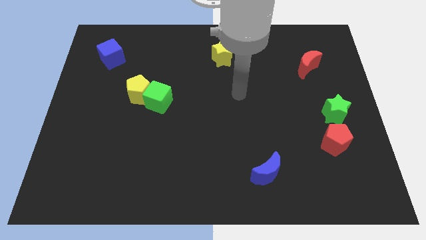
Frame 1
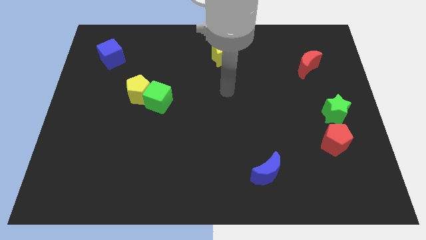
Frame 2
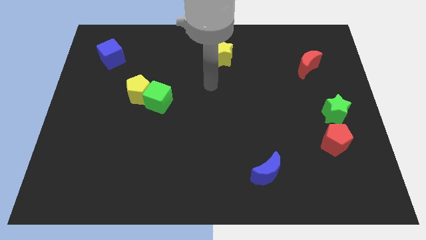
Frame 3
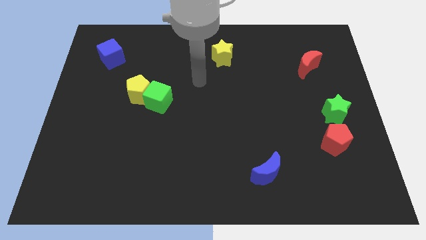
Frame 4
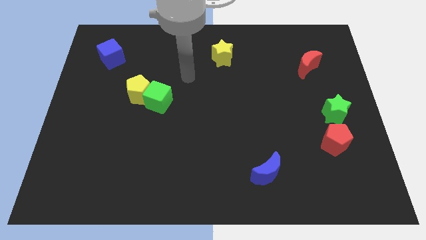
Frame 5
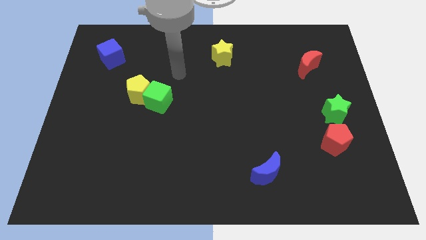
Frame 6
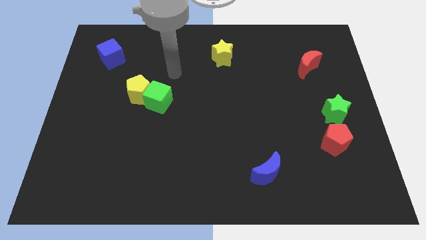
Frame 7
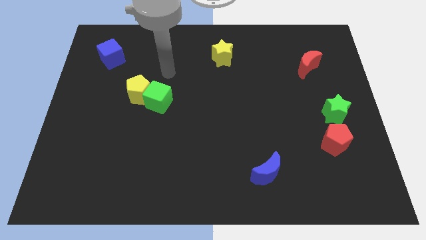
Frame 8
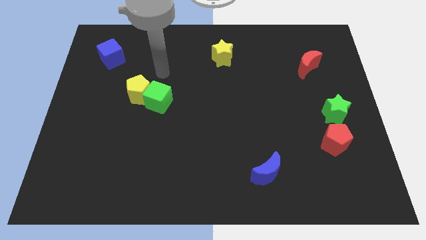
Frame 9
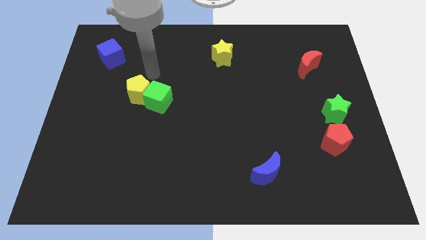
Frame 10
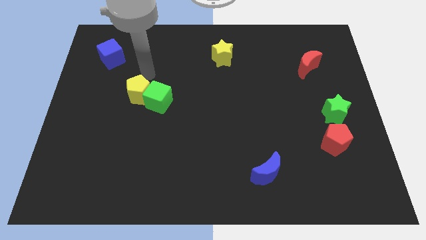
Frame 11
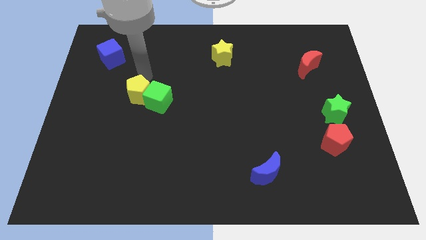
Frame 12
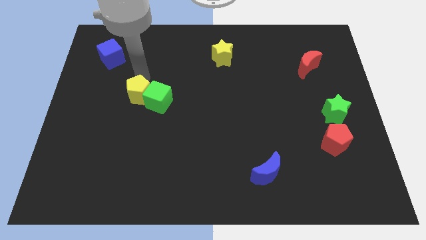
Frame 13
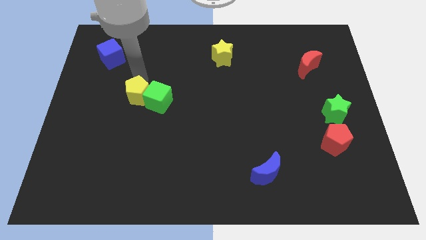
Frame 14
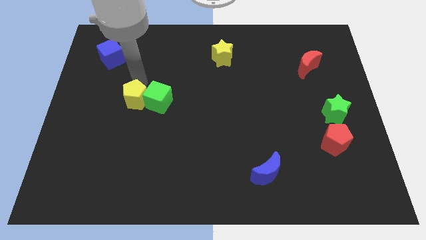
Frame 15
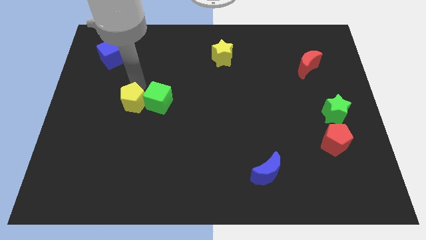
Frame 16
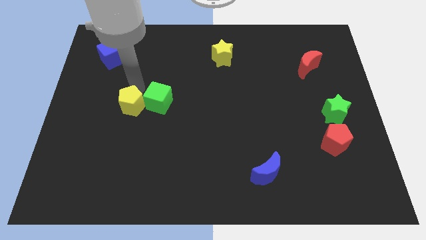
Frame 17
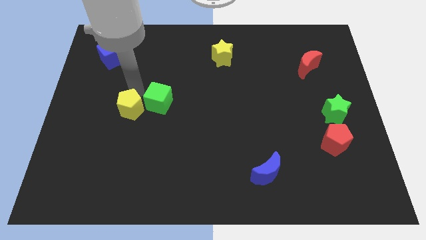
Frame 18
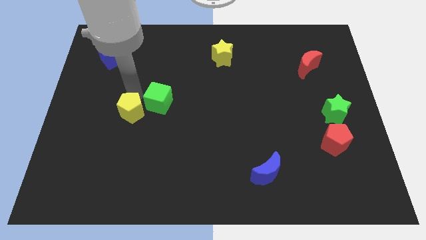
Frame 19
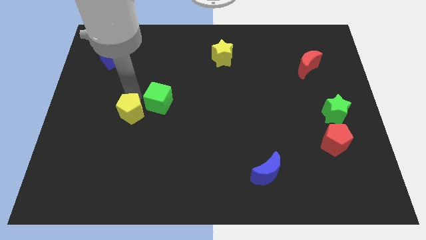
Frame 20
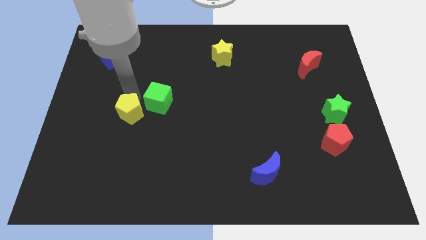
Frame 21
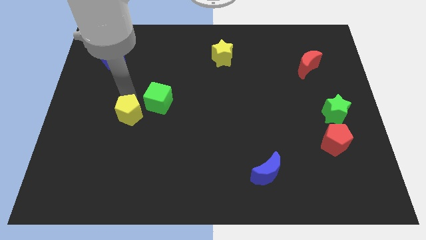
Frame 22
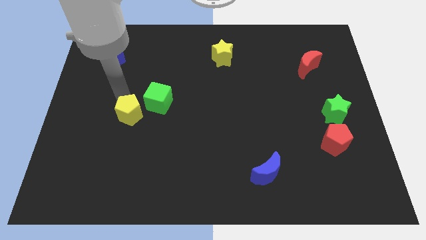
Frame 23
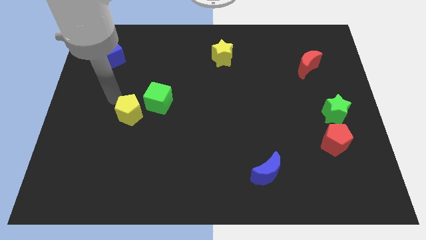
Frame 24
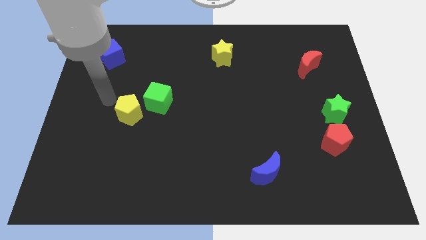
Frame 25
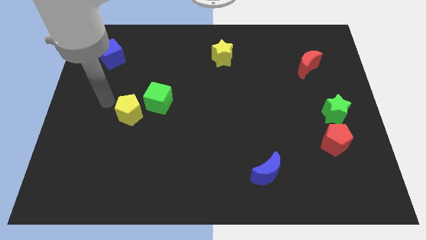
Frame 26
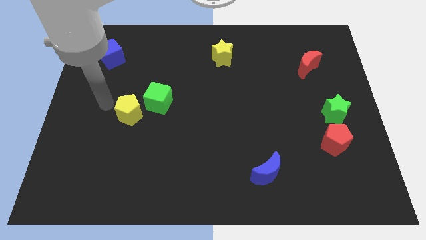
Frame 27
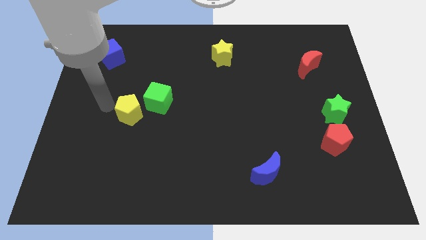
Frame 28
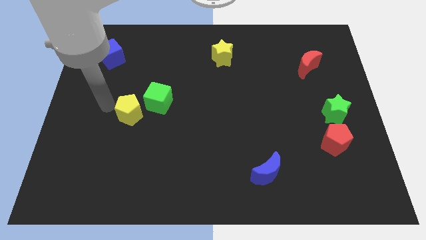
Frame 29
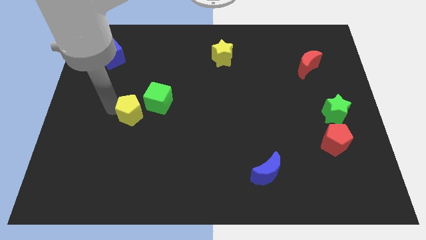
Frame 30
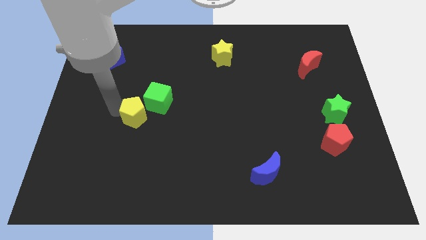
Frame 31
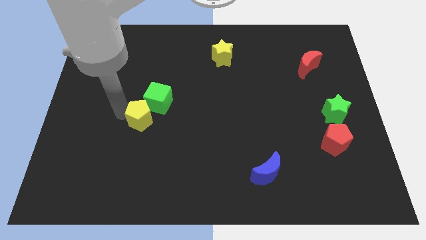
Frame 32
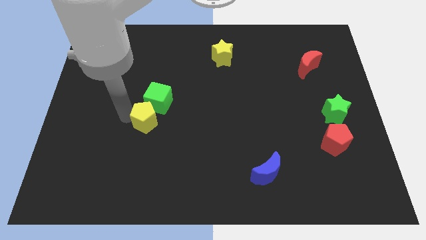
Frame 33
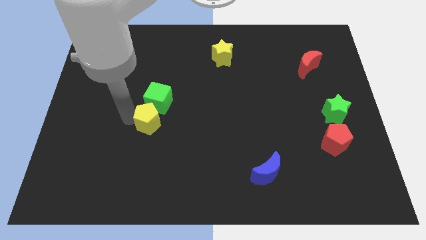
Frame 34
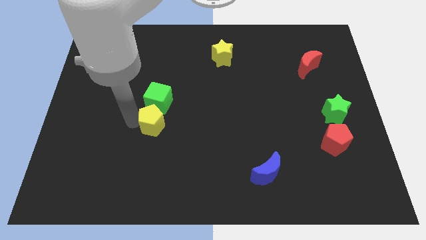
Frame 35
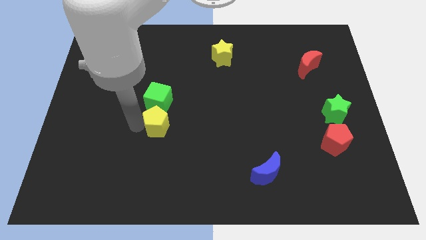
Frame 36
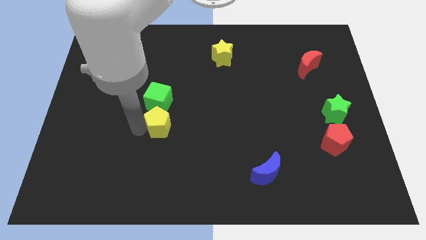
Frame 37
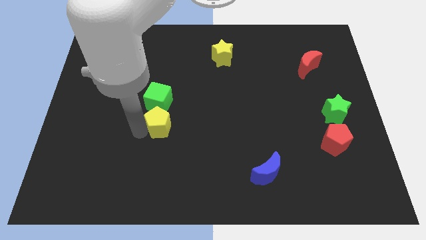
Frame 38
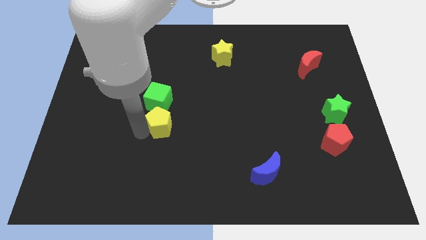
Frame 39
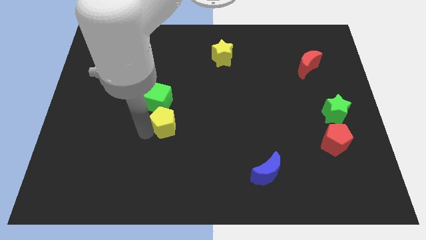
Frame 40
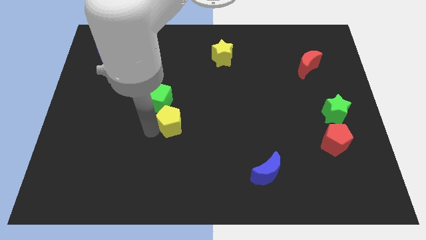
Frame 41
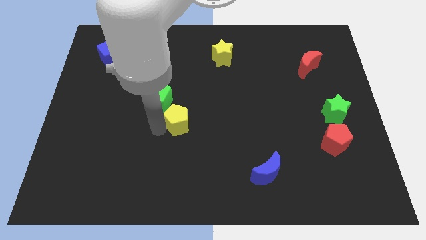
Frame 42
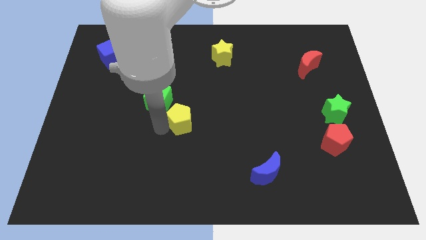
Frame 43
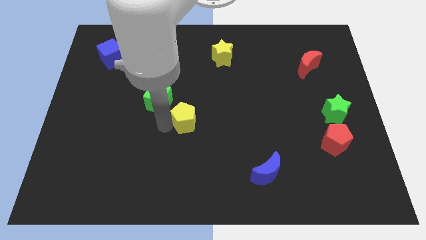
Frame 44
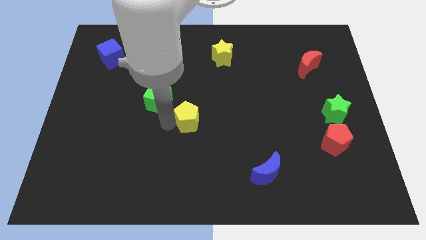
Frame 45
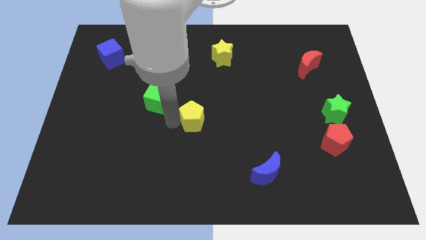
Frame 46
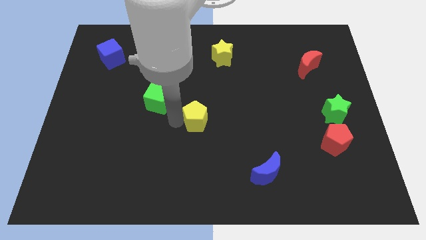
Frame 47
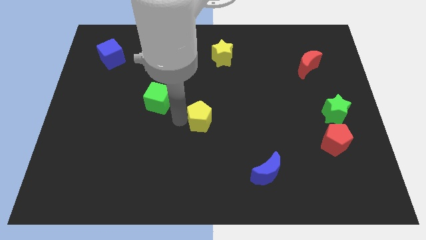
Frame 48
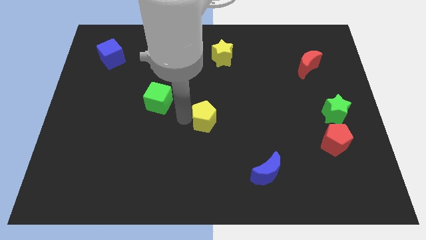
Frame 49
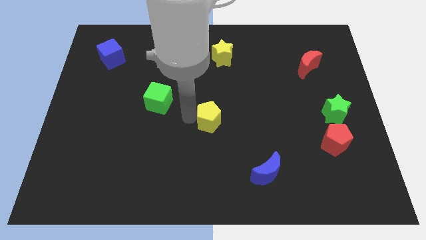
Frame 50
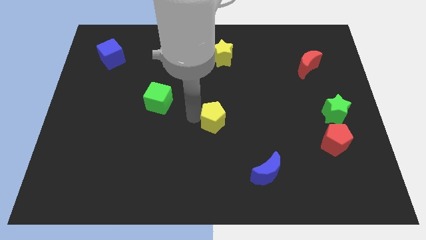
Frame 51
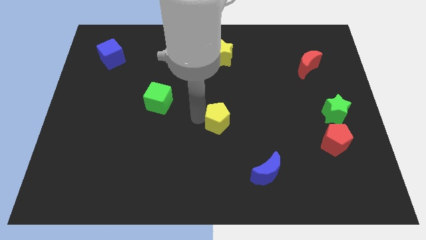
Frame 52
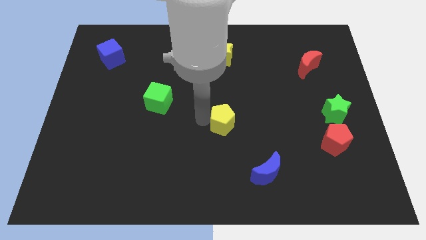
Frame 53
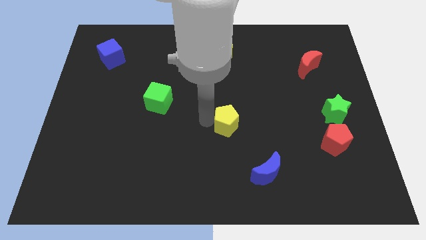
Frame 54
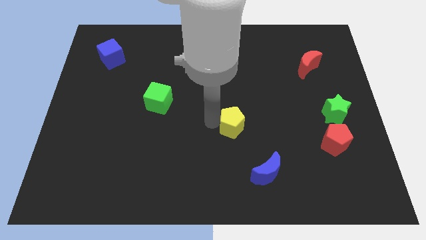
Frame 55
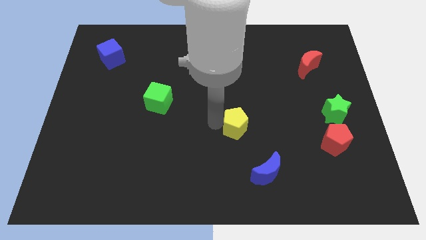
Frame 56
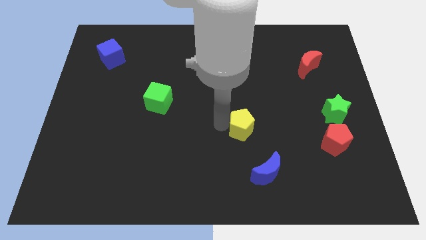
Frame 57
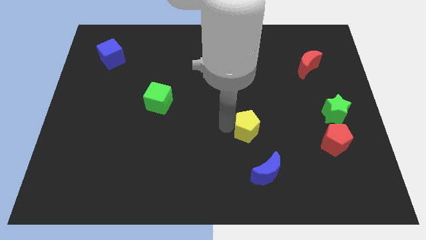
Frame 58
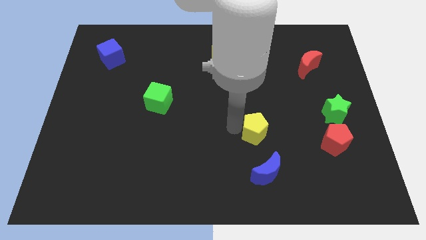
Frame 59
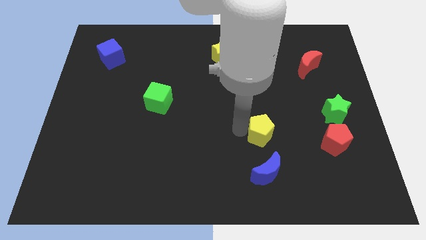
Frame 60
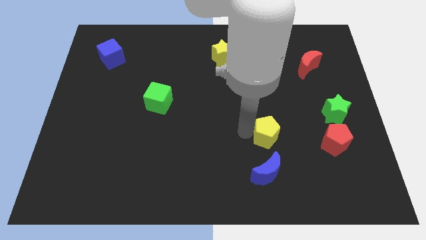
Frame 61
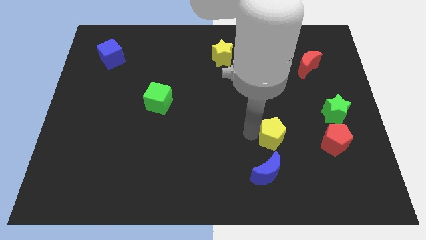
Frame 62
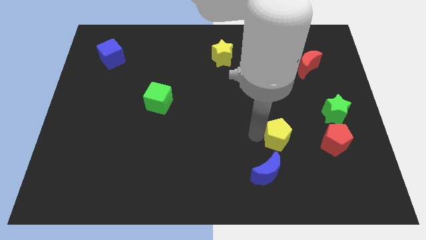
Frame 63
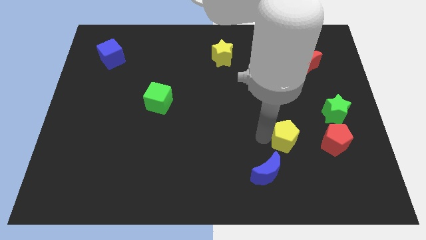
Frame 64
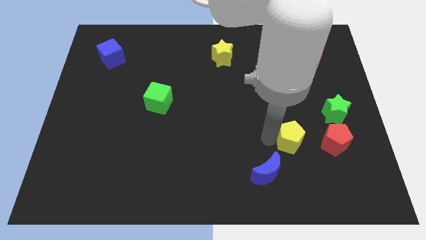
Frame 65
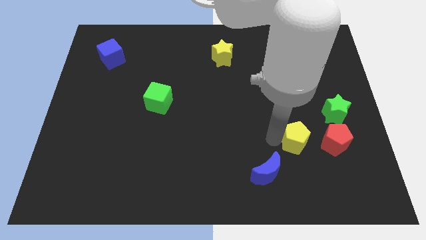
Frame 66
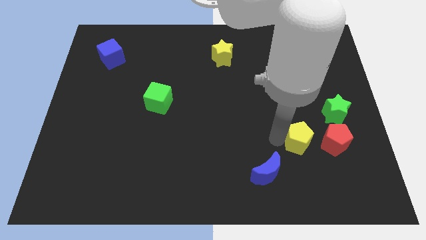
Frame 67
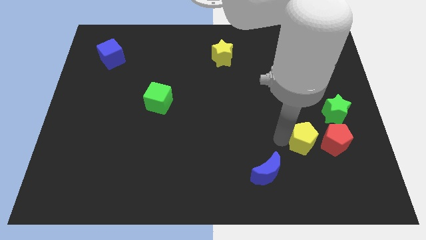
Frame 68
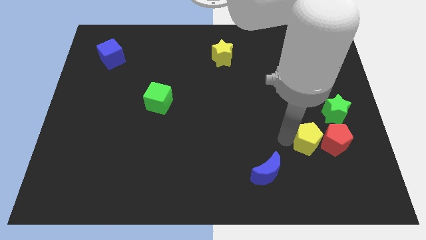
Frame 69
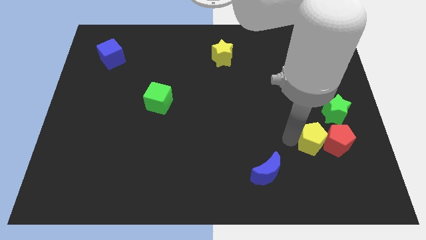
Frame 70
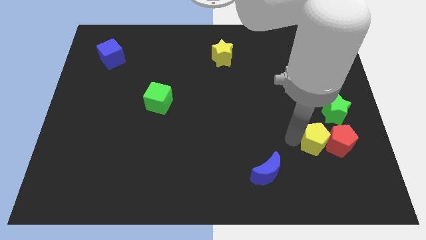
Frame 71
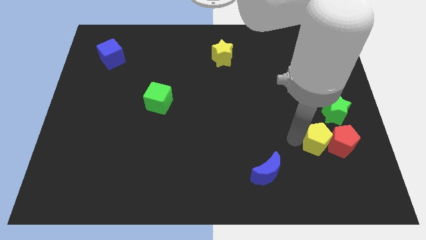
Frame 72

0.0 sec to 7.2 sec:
push the yellow pentagon to the red pentagon

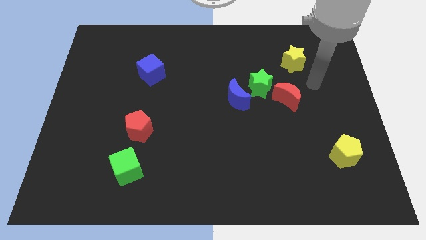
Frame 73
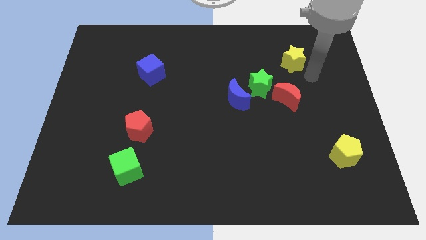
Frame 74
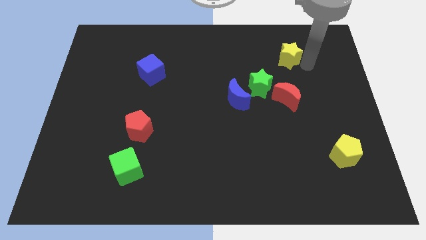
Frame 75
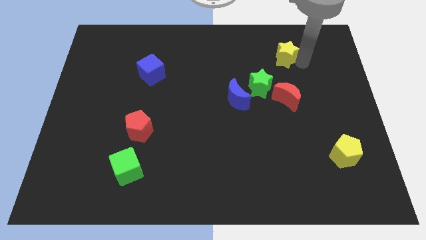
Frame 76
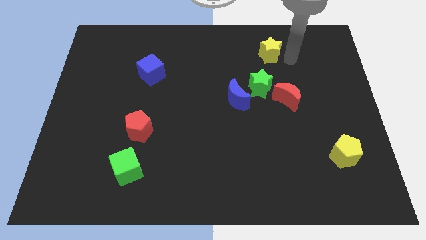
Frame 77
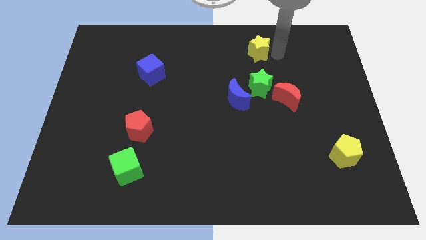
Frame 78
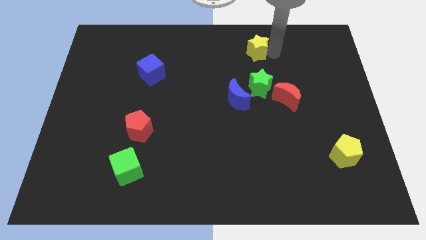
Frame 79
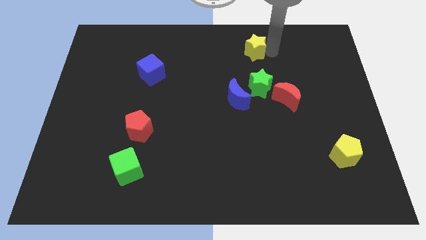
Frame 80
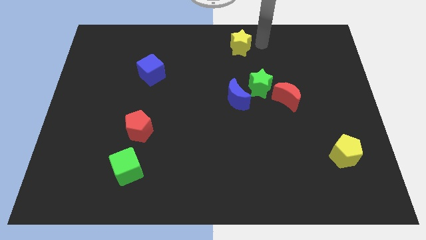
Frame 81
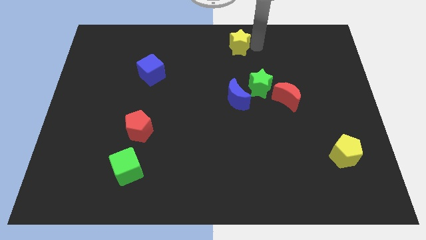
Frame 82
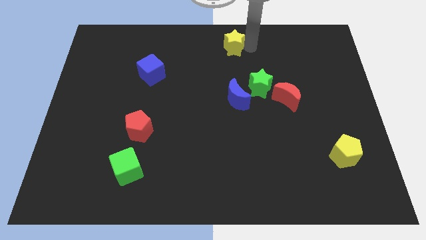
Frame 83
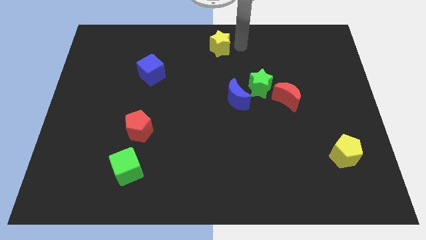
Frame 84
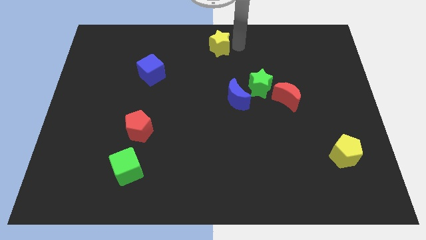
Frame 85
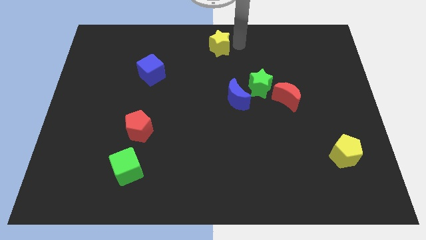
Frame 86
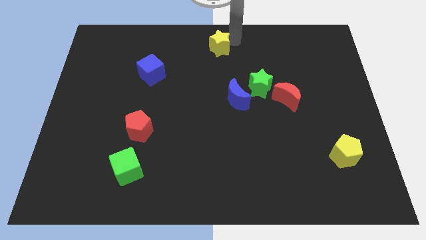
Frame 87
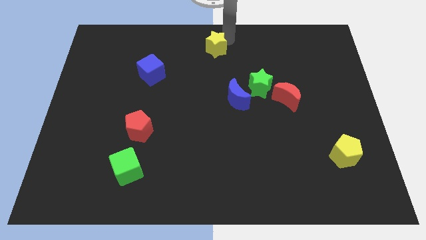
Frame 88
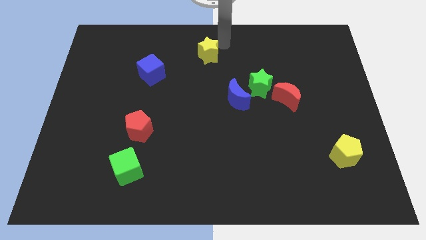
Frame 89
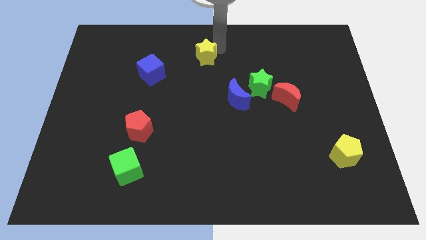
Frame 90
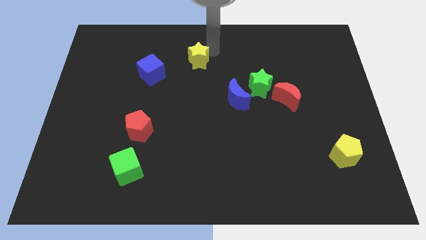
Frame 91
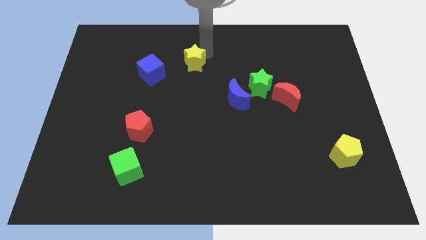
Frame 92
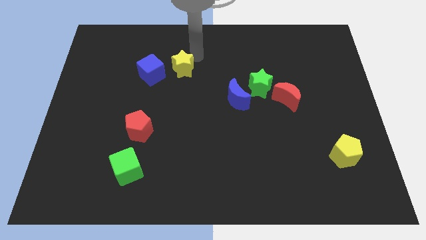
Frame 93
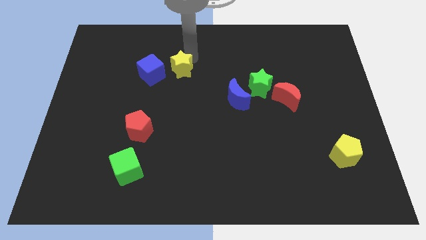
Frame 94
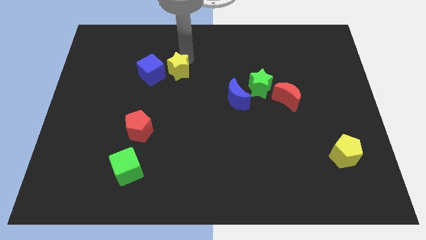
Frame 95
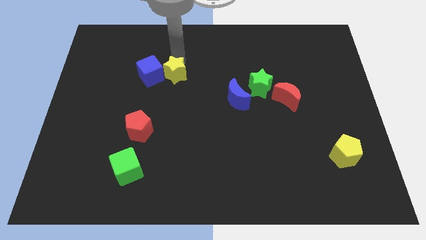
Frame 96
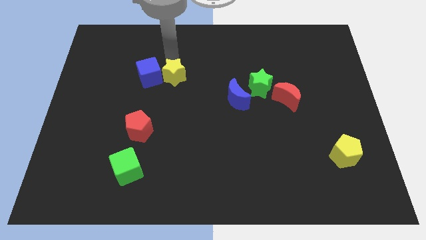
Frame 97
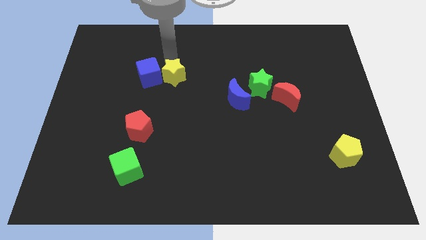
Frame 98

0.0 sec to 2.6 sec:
slide the yellow star close to the blue cube
